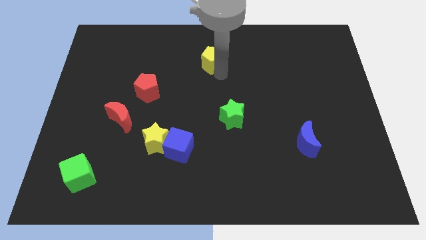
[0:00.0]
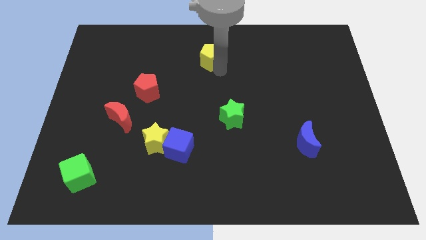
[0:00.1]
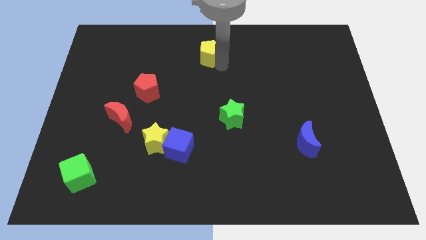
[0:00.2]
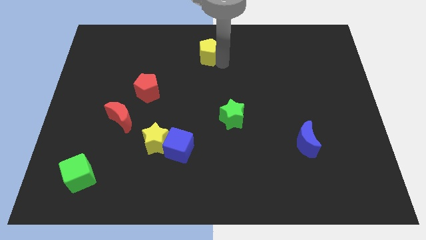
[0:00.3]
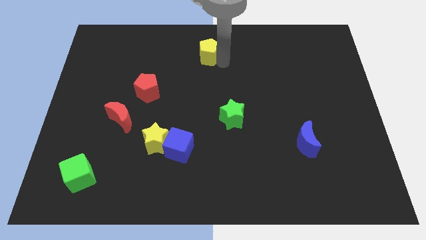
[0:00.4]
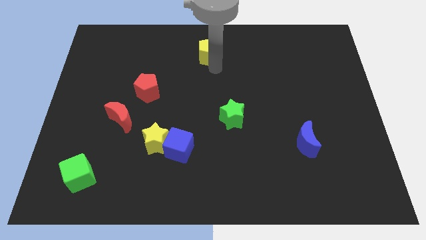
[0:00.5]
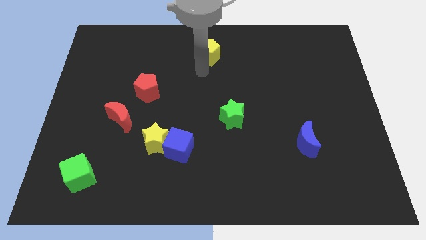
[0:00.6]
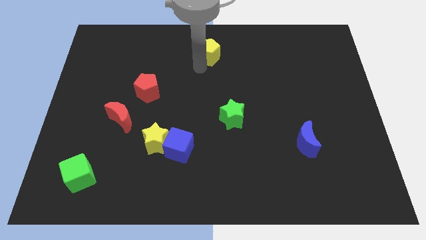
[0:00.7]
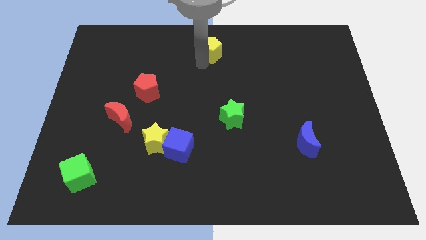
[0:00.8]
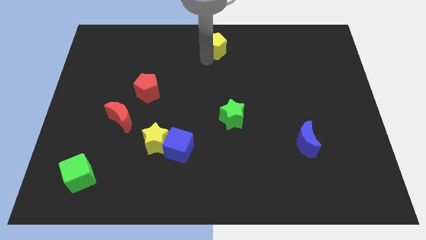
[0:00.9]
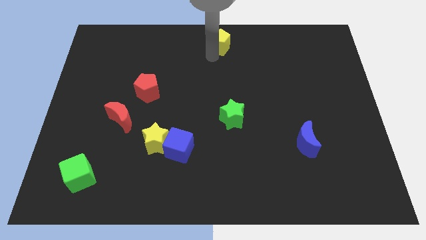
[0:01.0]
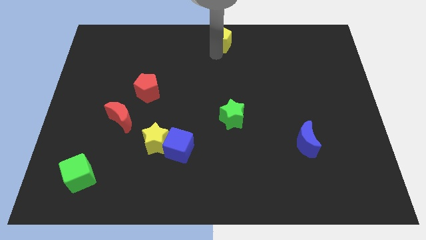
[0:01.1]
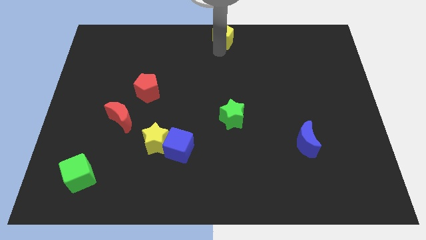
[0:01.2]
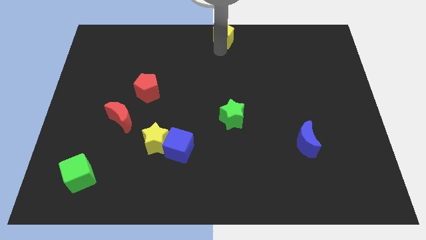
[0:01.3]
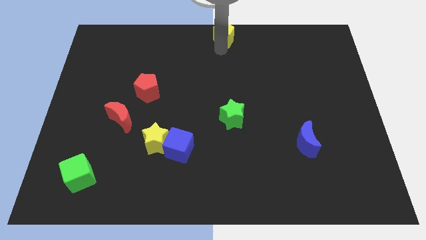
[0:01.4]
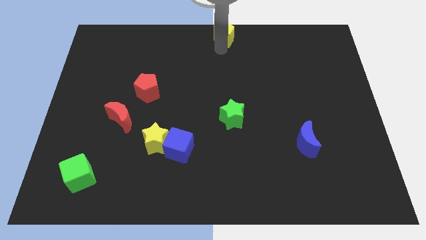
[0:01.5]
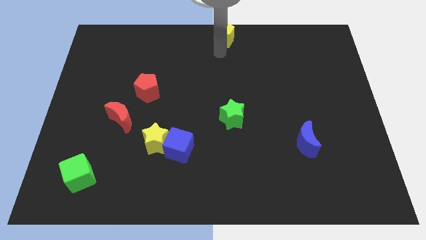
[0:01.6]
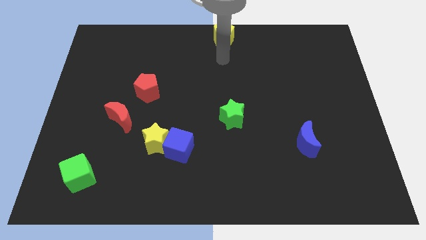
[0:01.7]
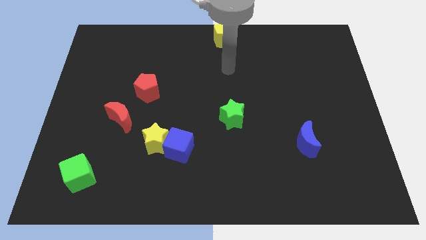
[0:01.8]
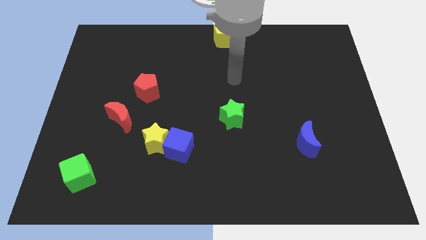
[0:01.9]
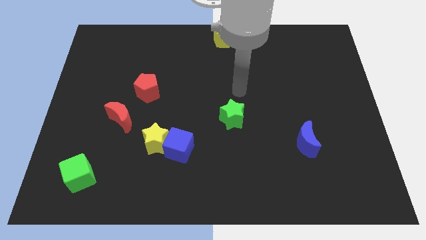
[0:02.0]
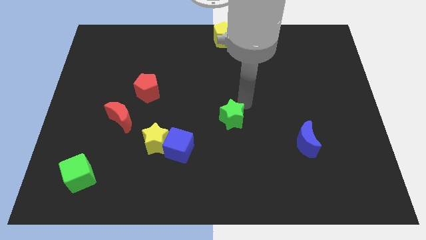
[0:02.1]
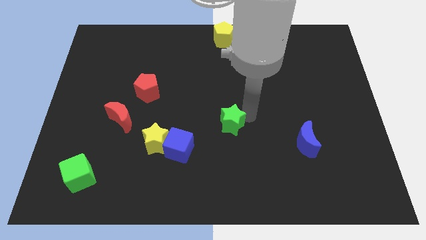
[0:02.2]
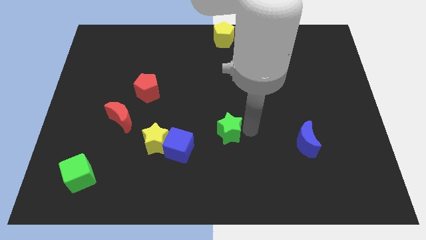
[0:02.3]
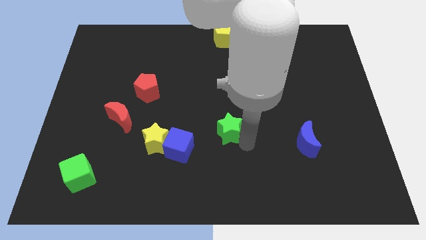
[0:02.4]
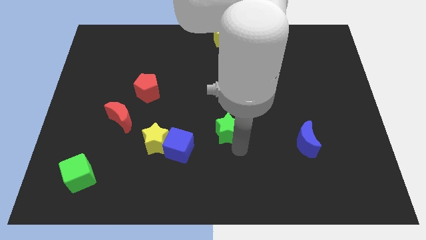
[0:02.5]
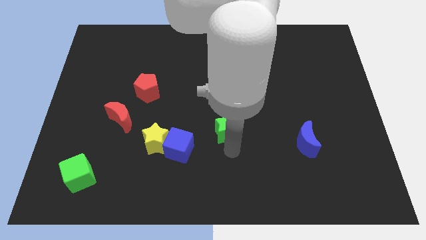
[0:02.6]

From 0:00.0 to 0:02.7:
move your arm towards the bottom side of the green star

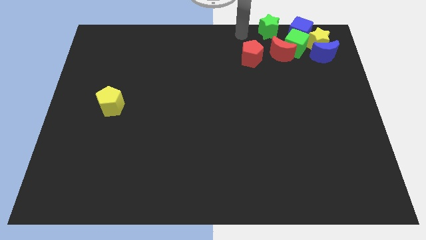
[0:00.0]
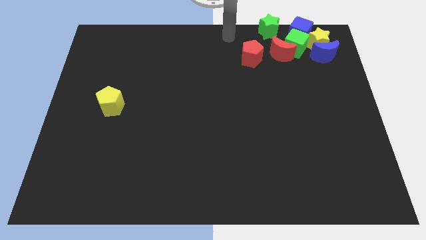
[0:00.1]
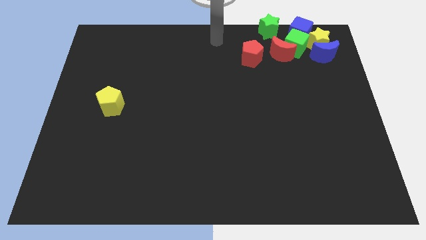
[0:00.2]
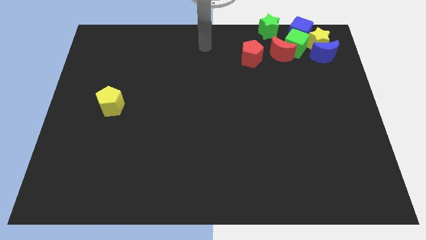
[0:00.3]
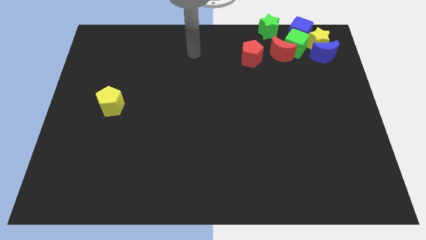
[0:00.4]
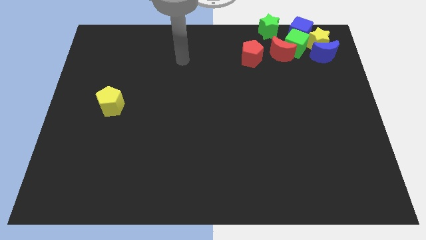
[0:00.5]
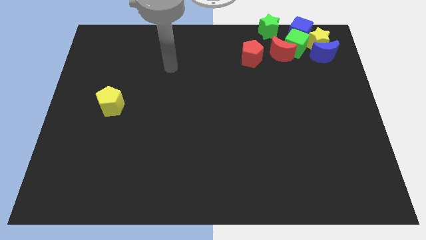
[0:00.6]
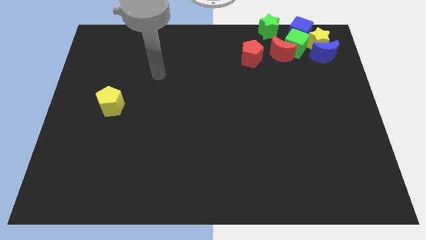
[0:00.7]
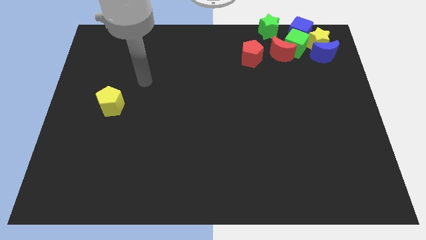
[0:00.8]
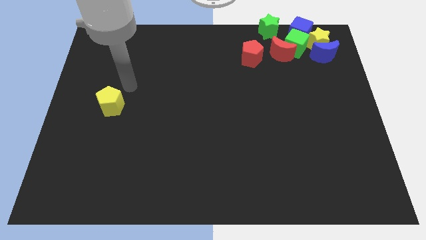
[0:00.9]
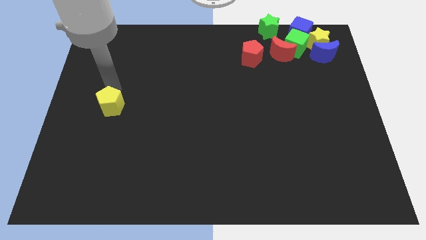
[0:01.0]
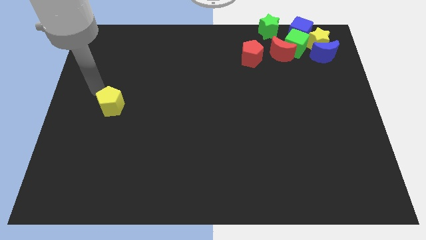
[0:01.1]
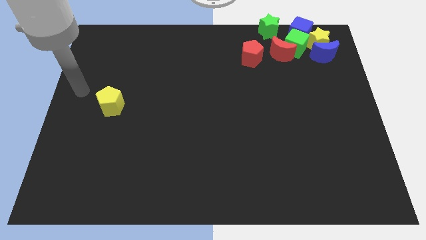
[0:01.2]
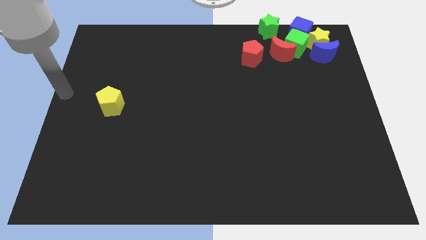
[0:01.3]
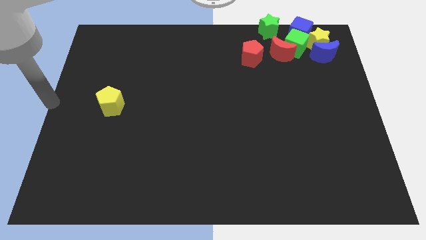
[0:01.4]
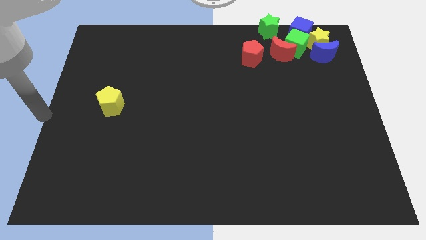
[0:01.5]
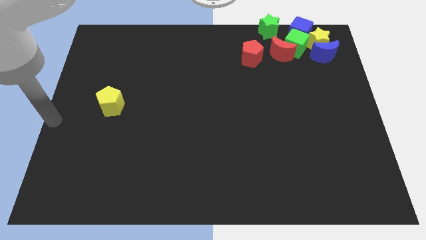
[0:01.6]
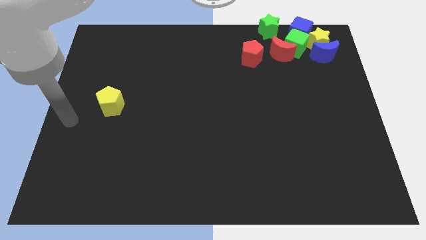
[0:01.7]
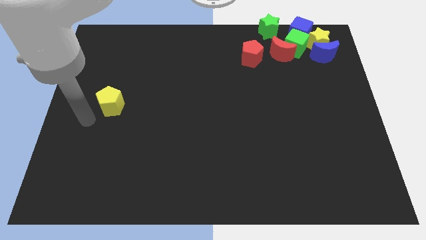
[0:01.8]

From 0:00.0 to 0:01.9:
point the arm to the bottom left of the yellow pentagon

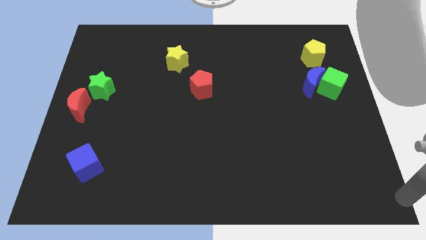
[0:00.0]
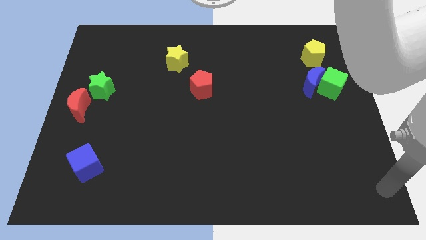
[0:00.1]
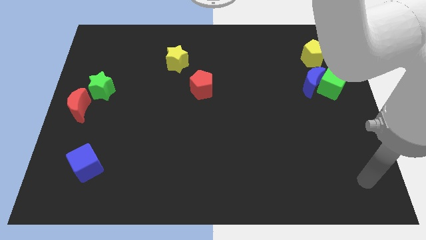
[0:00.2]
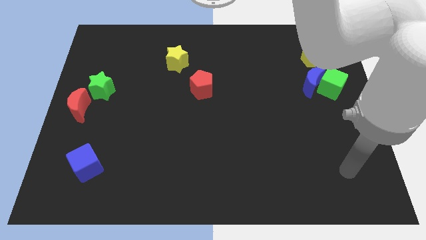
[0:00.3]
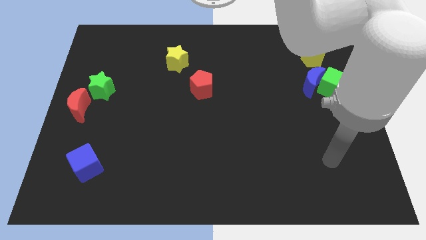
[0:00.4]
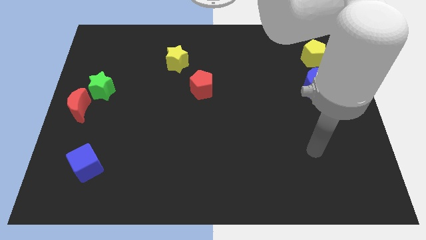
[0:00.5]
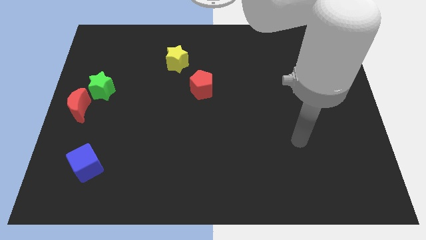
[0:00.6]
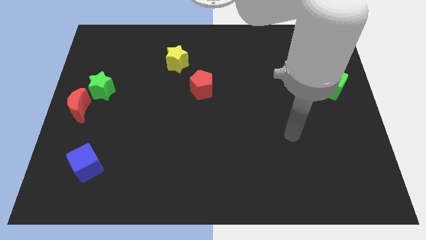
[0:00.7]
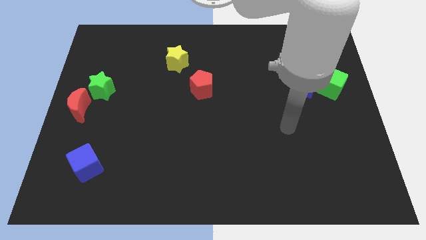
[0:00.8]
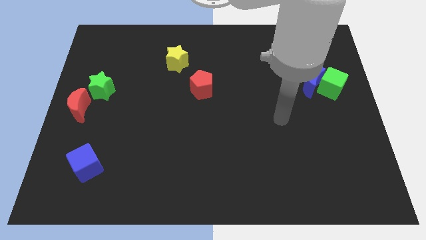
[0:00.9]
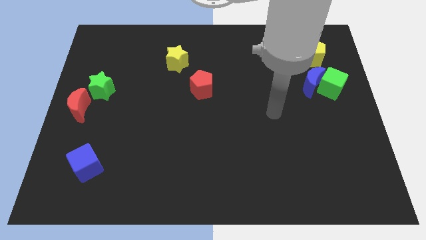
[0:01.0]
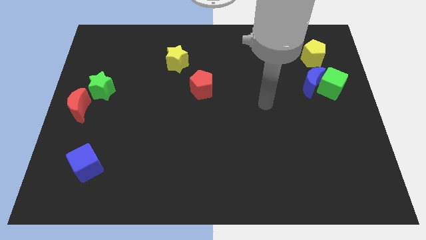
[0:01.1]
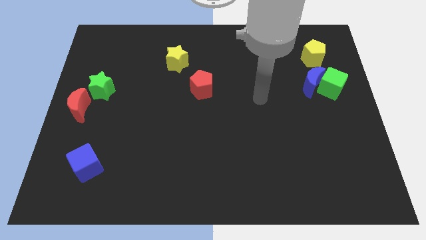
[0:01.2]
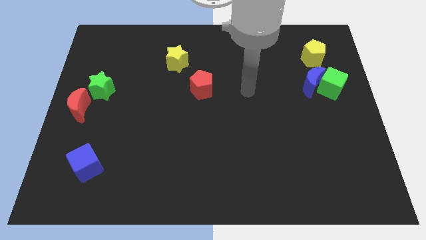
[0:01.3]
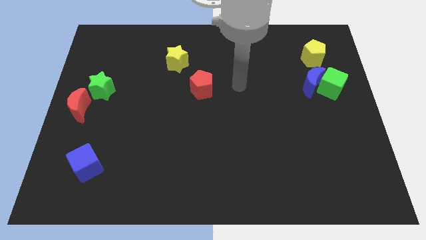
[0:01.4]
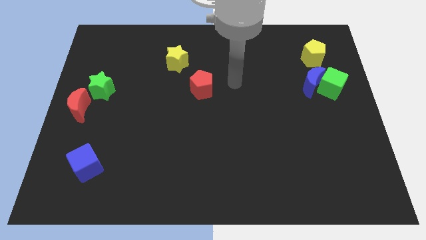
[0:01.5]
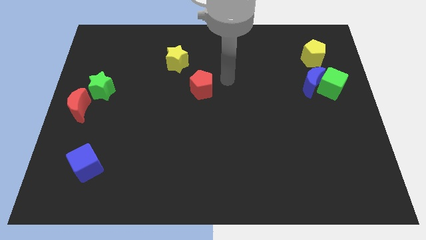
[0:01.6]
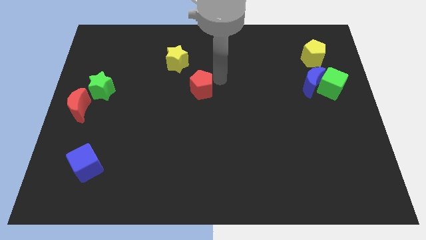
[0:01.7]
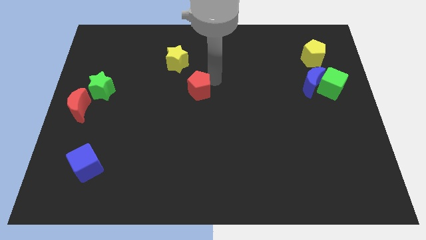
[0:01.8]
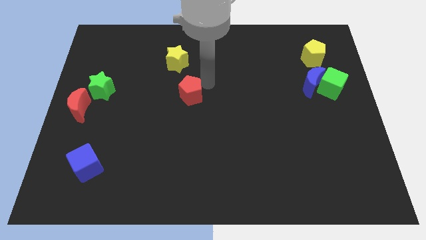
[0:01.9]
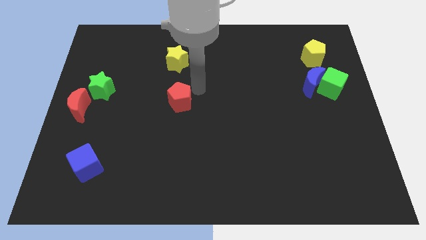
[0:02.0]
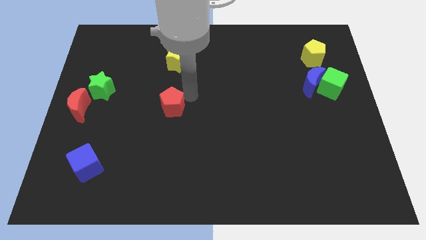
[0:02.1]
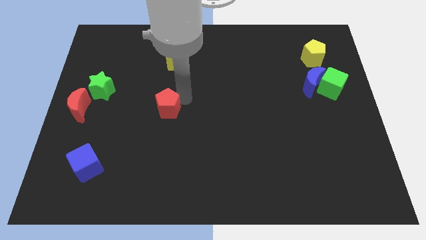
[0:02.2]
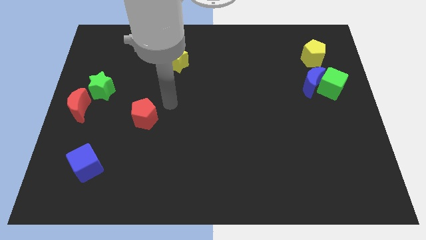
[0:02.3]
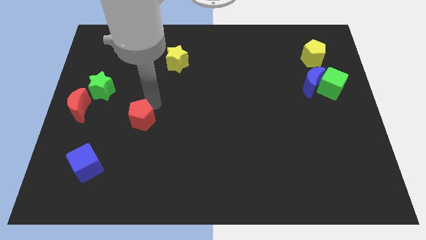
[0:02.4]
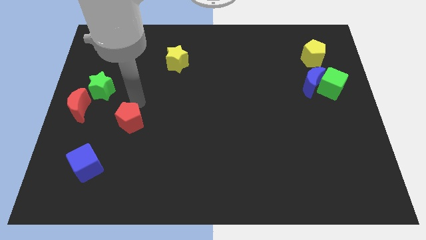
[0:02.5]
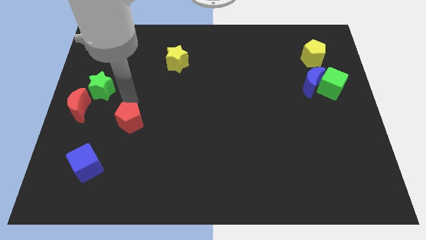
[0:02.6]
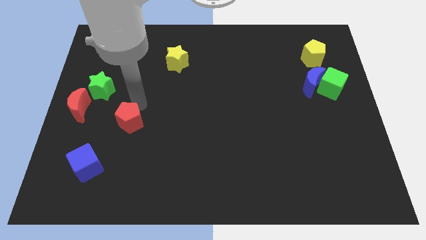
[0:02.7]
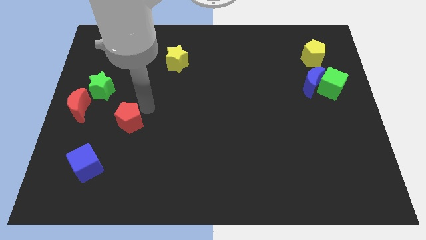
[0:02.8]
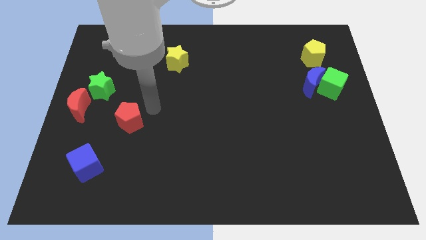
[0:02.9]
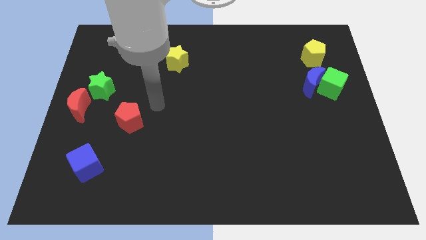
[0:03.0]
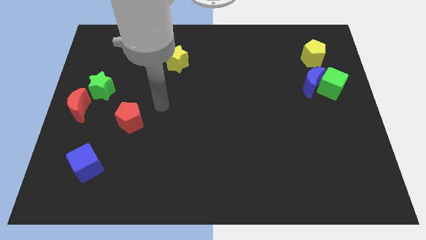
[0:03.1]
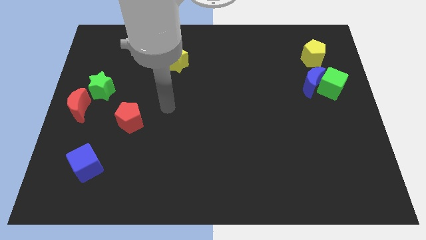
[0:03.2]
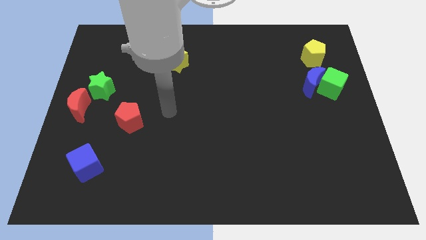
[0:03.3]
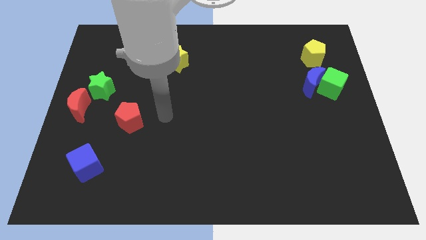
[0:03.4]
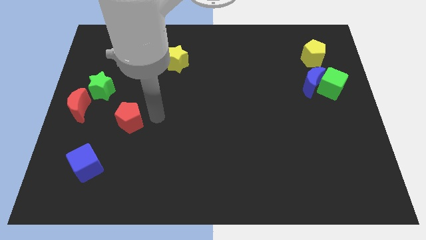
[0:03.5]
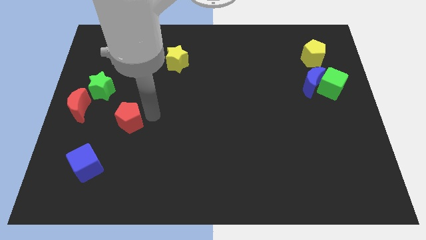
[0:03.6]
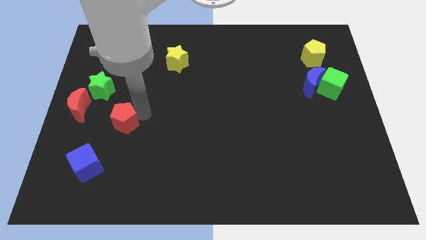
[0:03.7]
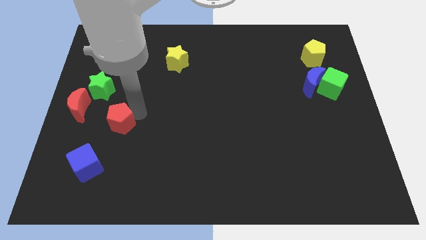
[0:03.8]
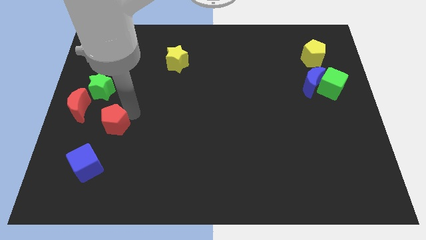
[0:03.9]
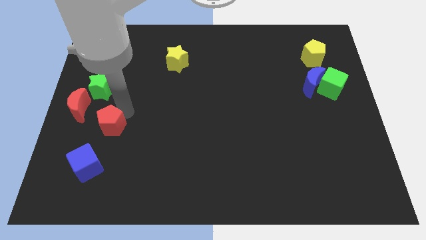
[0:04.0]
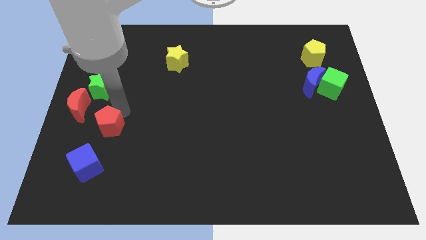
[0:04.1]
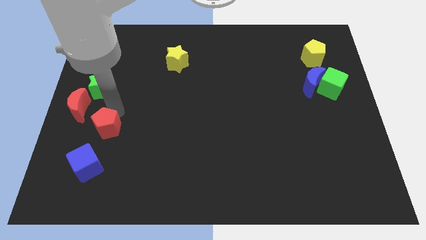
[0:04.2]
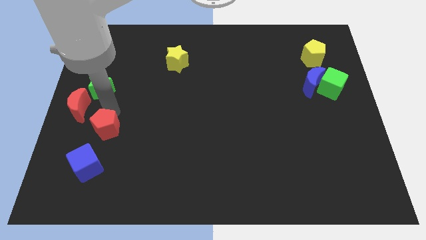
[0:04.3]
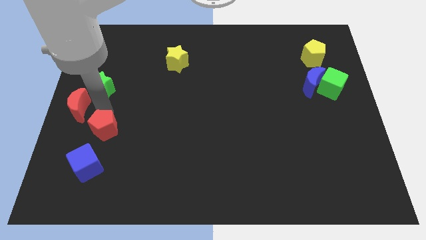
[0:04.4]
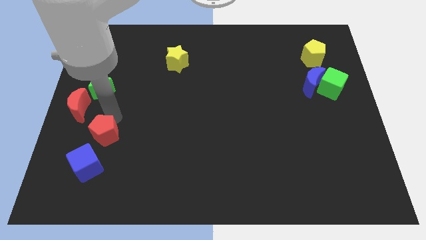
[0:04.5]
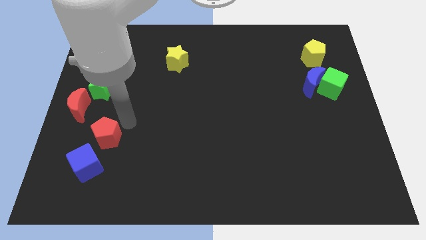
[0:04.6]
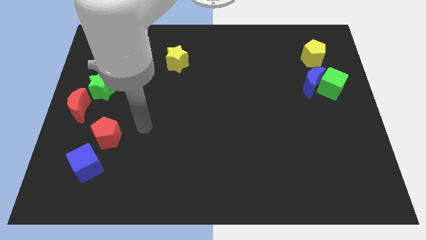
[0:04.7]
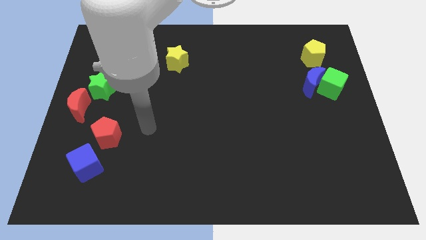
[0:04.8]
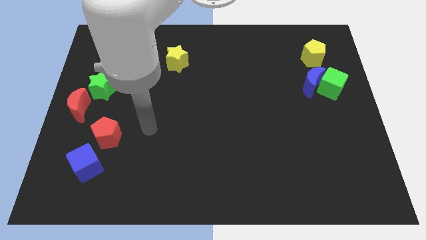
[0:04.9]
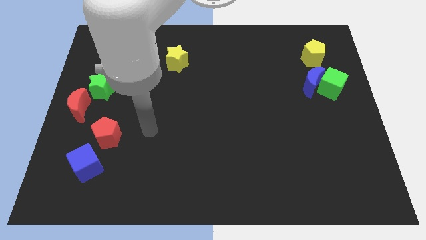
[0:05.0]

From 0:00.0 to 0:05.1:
push the red pentagon close to the blue cube
